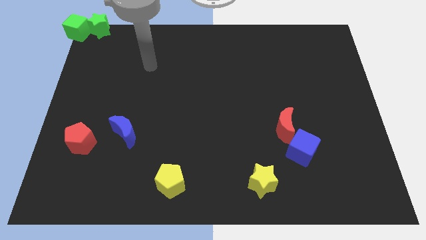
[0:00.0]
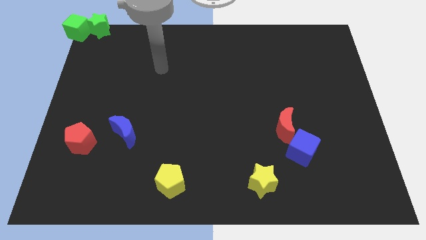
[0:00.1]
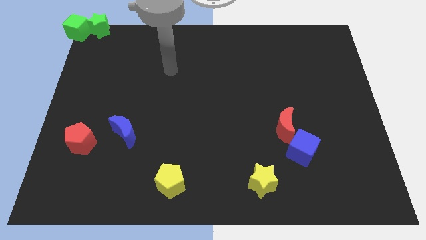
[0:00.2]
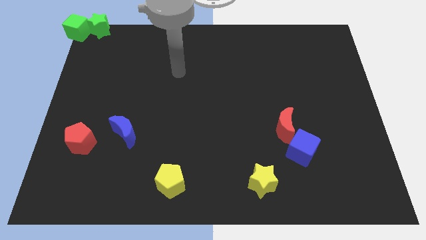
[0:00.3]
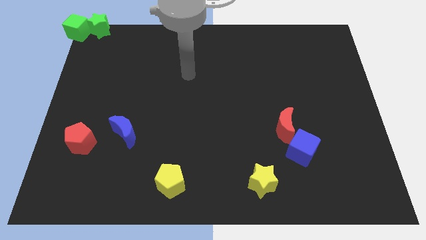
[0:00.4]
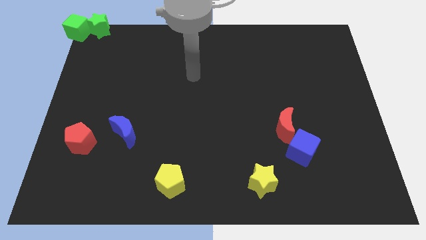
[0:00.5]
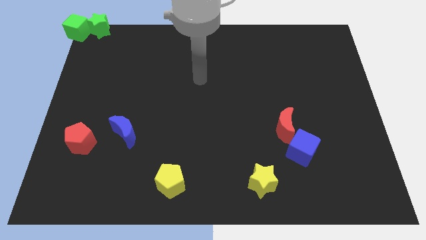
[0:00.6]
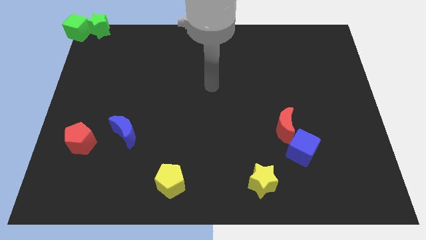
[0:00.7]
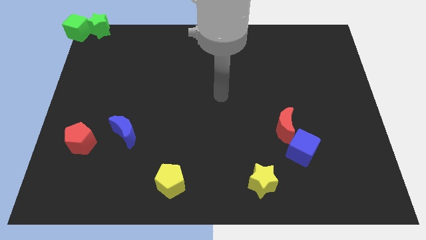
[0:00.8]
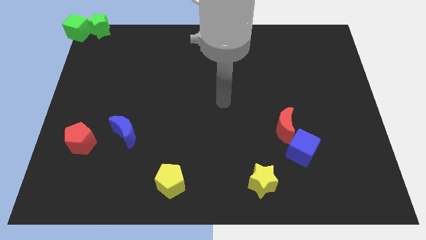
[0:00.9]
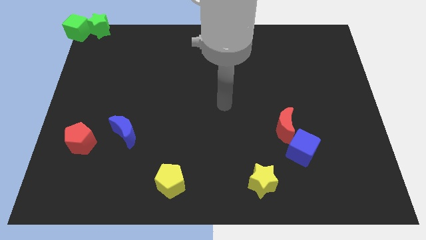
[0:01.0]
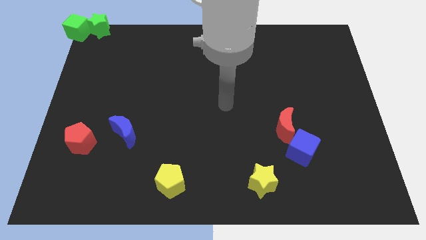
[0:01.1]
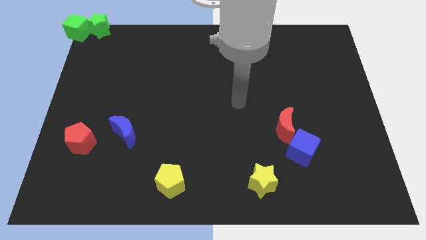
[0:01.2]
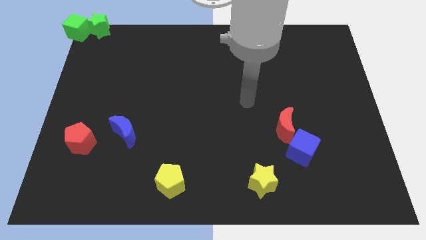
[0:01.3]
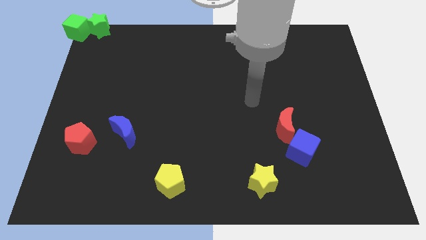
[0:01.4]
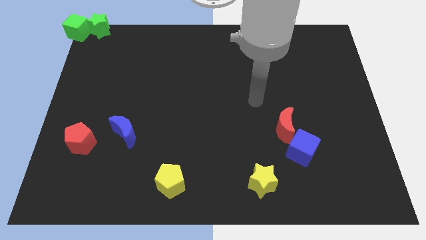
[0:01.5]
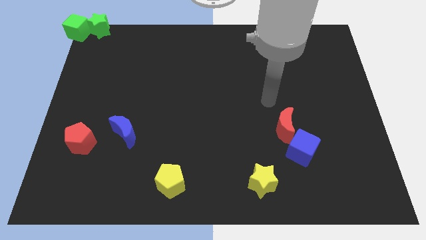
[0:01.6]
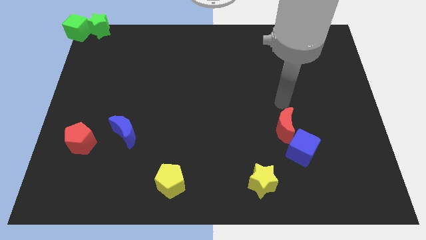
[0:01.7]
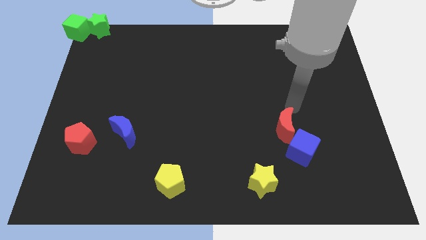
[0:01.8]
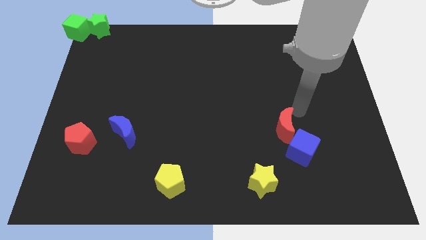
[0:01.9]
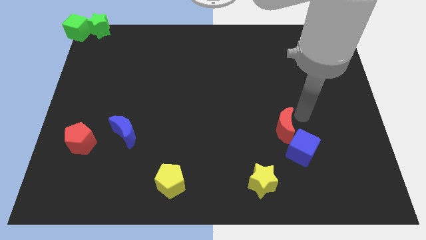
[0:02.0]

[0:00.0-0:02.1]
point your arm to the top of the blue cube

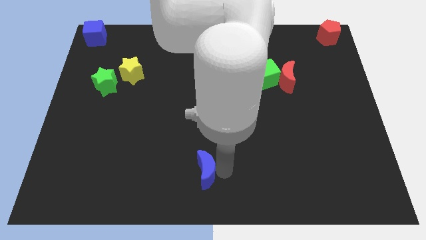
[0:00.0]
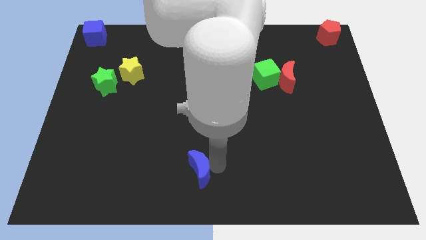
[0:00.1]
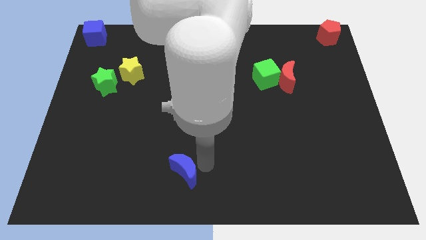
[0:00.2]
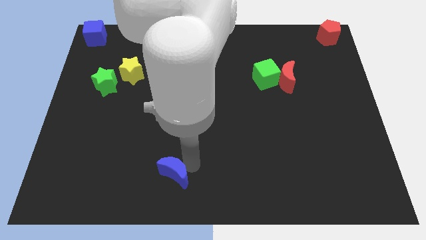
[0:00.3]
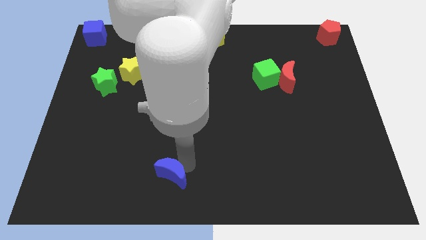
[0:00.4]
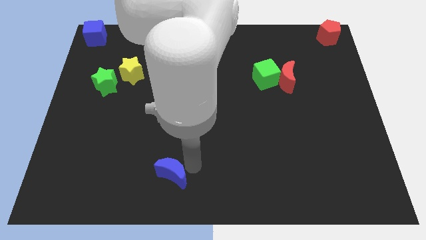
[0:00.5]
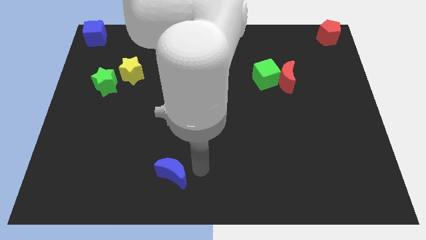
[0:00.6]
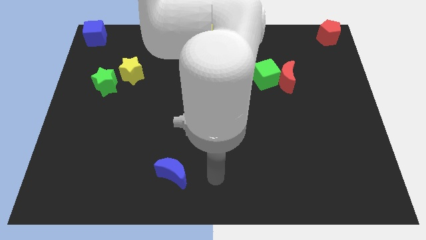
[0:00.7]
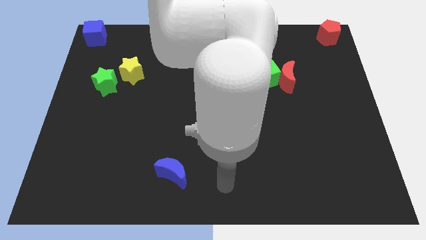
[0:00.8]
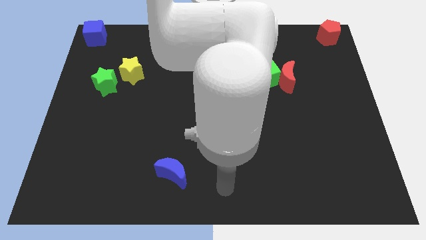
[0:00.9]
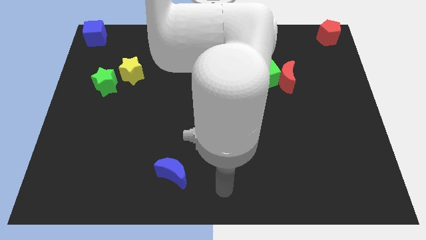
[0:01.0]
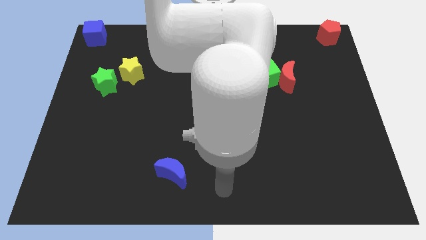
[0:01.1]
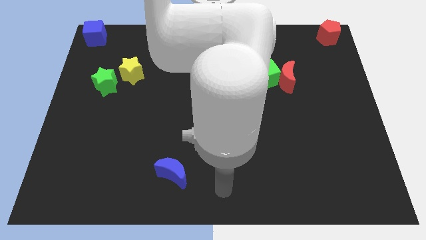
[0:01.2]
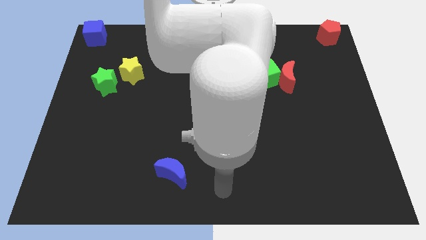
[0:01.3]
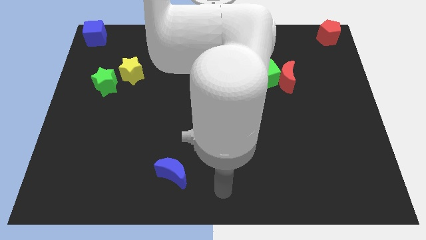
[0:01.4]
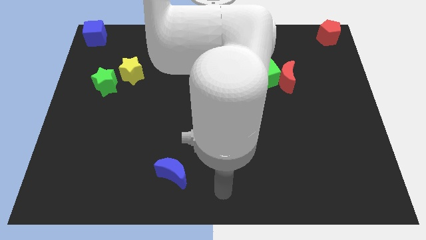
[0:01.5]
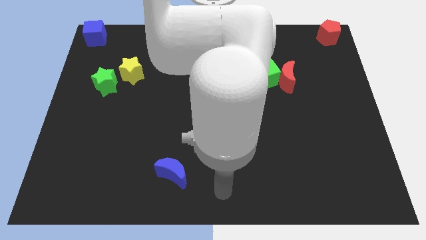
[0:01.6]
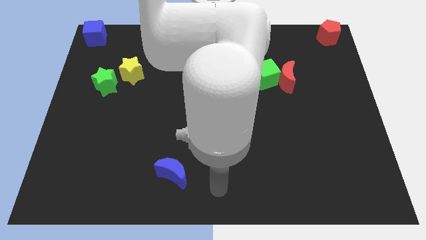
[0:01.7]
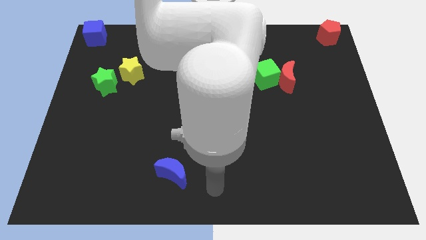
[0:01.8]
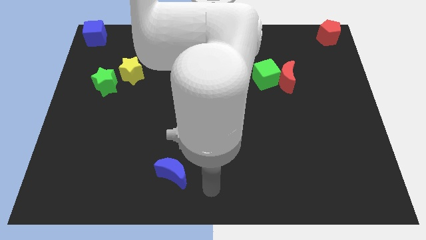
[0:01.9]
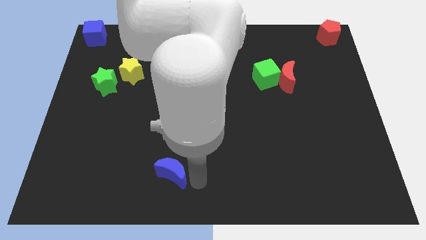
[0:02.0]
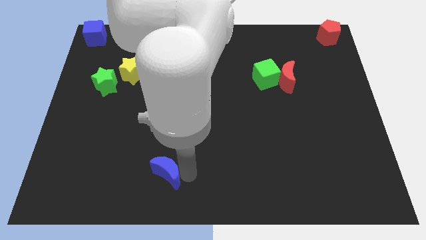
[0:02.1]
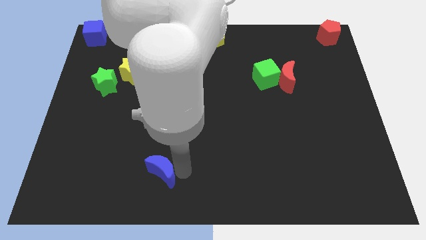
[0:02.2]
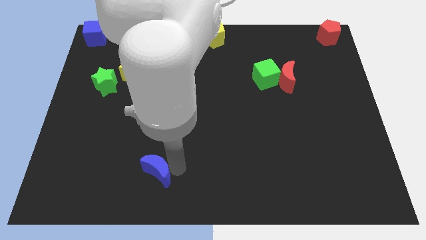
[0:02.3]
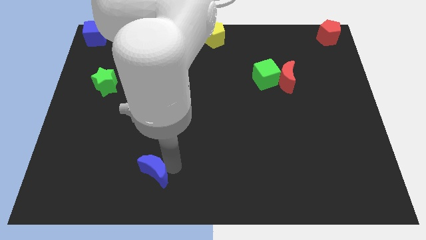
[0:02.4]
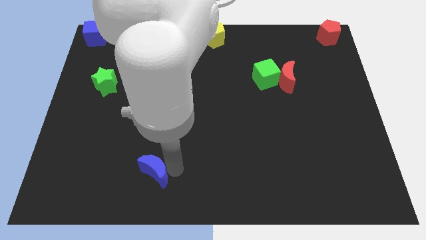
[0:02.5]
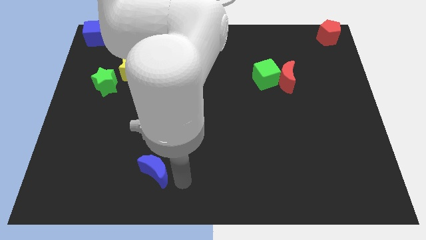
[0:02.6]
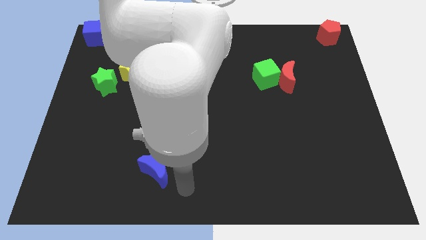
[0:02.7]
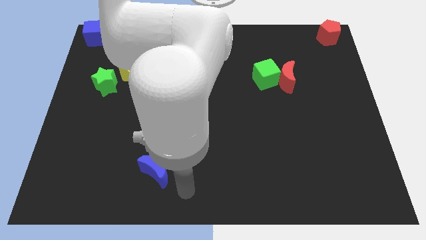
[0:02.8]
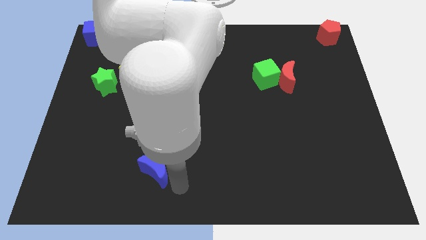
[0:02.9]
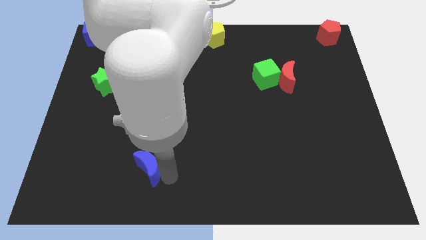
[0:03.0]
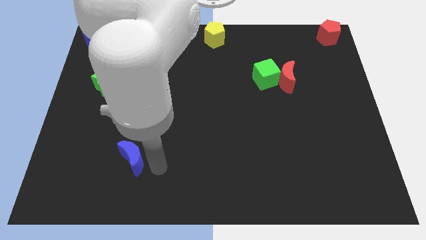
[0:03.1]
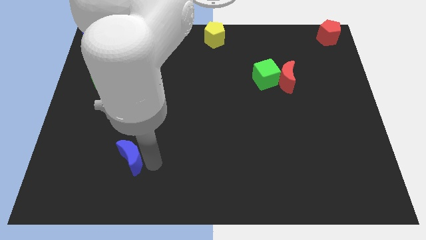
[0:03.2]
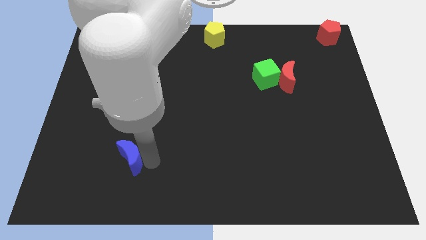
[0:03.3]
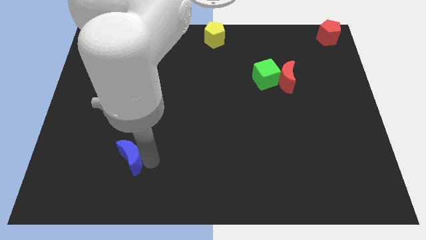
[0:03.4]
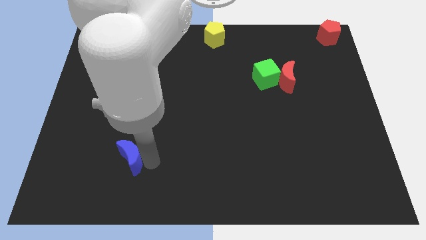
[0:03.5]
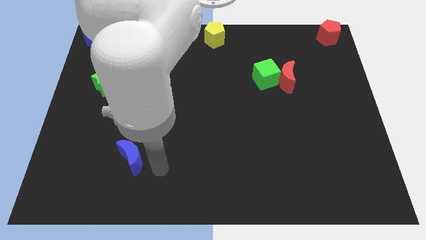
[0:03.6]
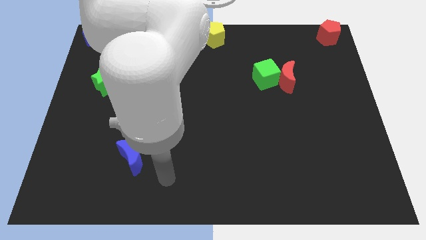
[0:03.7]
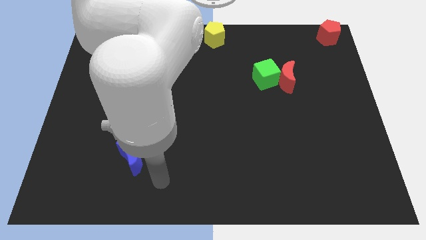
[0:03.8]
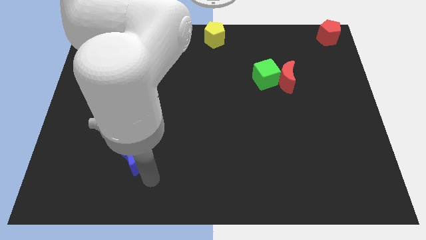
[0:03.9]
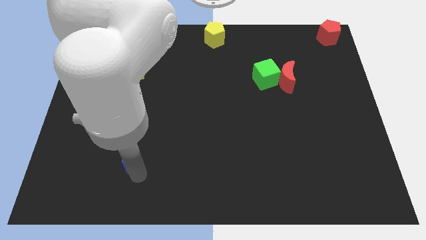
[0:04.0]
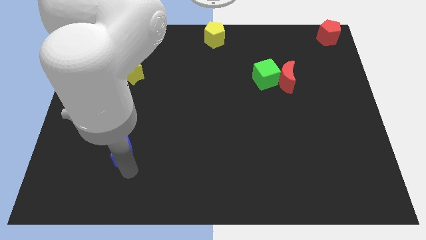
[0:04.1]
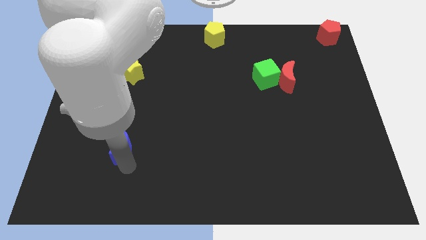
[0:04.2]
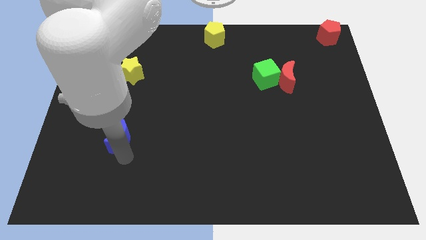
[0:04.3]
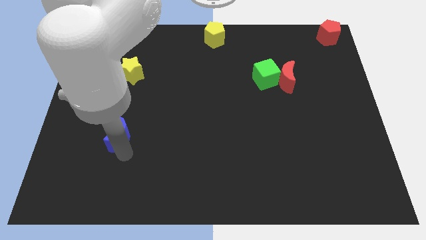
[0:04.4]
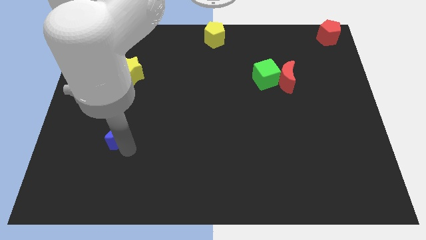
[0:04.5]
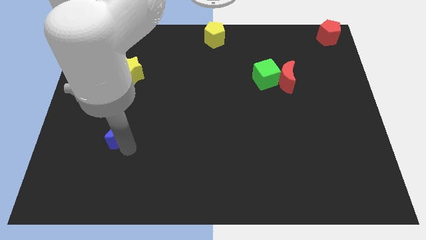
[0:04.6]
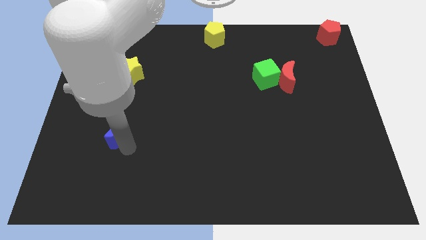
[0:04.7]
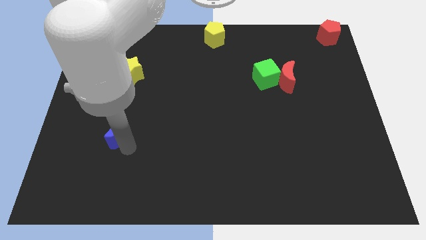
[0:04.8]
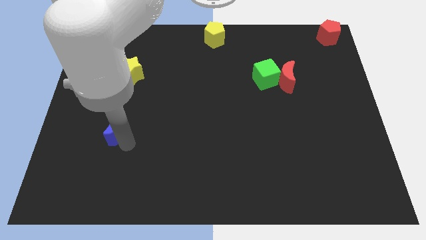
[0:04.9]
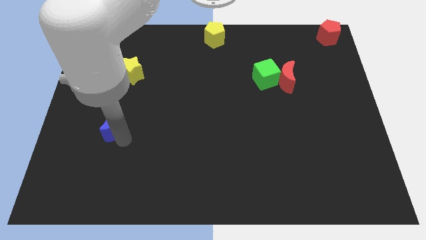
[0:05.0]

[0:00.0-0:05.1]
slide the blue moon to the left side of the table

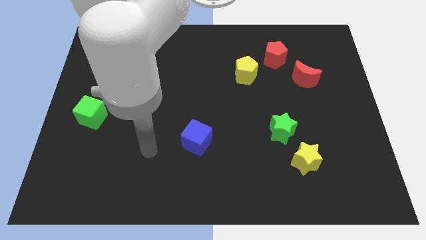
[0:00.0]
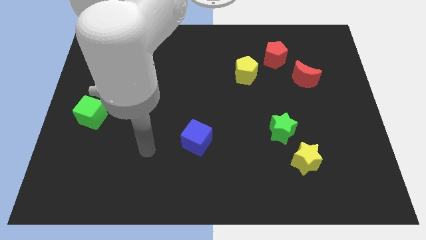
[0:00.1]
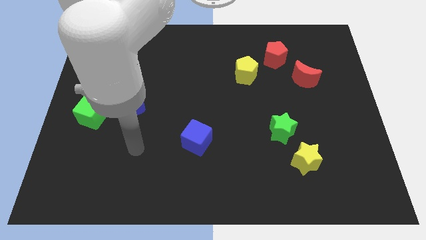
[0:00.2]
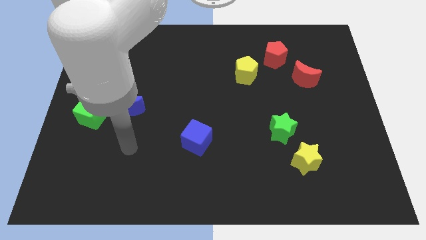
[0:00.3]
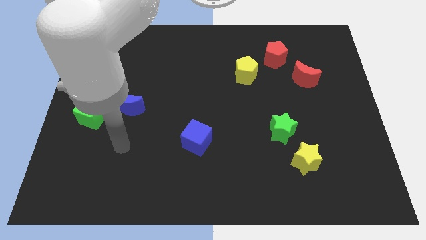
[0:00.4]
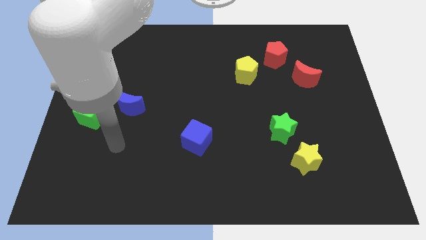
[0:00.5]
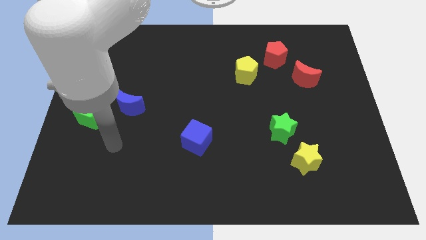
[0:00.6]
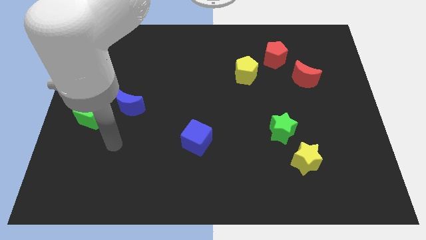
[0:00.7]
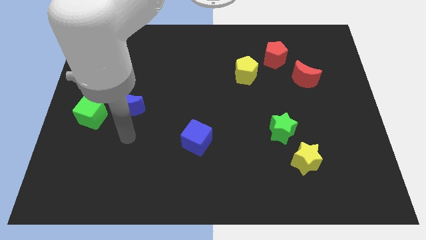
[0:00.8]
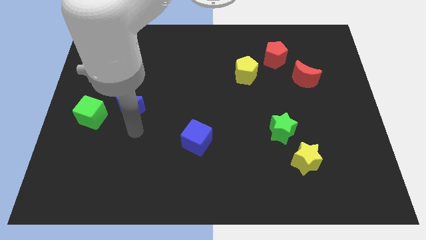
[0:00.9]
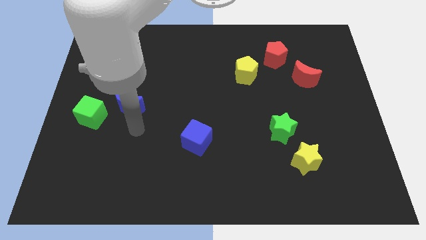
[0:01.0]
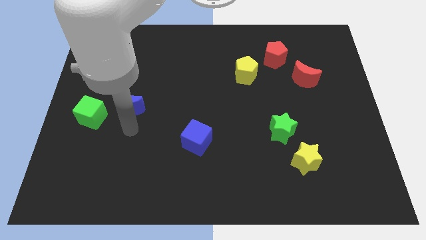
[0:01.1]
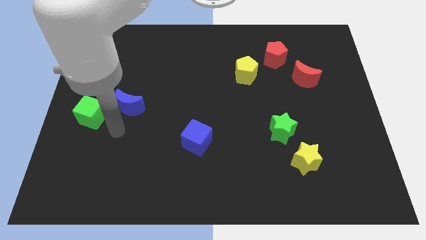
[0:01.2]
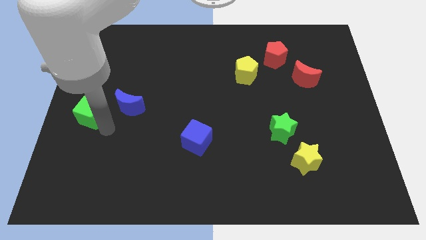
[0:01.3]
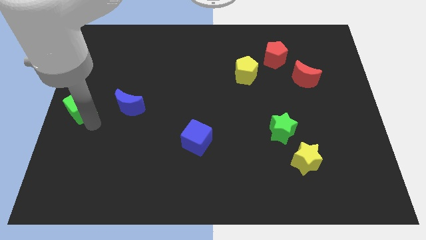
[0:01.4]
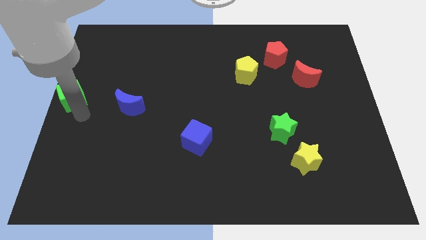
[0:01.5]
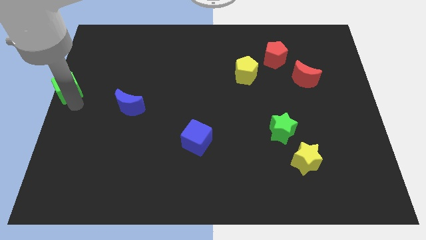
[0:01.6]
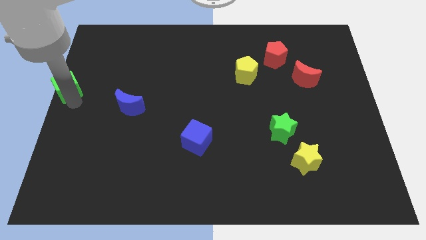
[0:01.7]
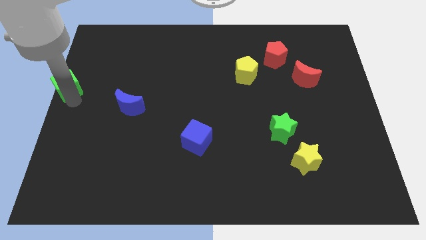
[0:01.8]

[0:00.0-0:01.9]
move the green cube away from the blue crescent
